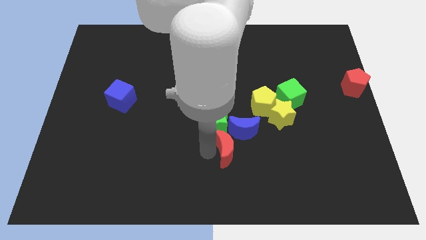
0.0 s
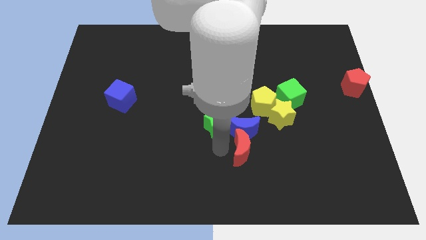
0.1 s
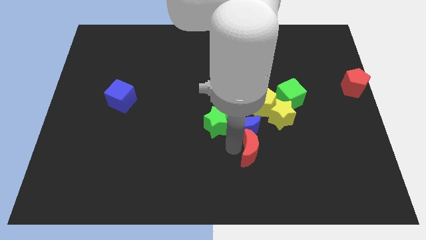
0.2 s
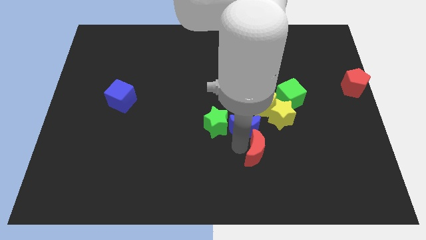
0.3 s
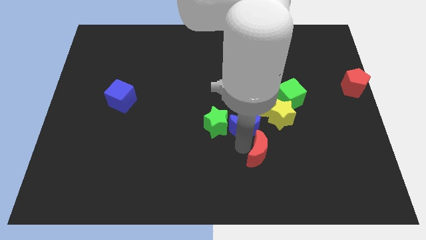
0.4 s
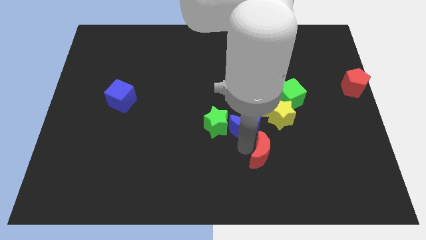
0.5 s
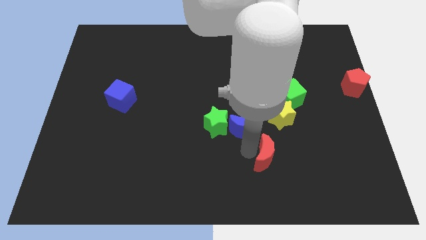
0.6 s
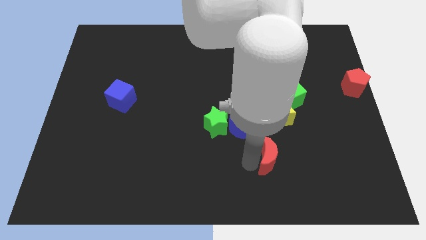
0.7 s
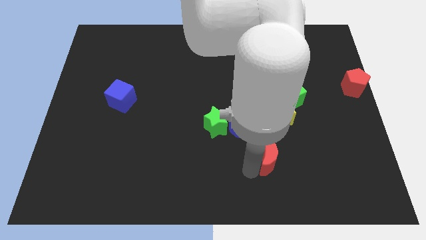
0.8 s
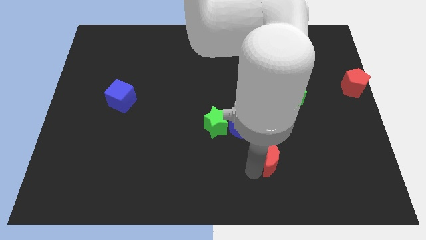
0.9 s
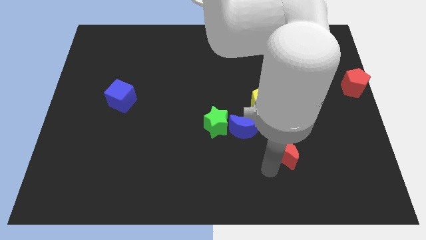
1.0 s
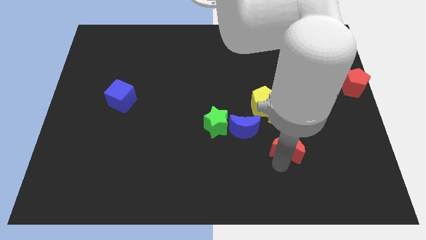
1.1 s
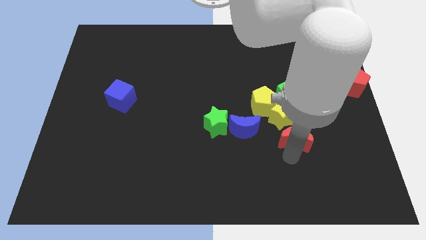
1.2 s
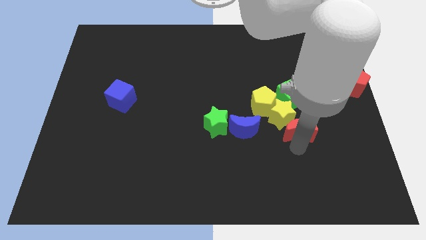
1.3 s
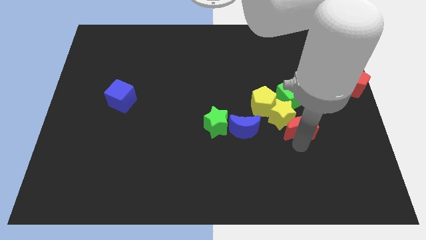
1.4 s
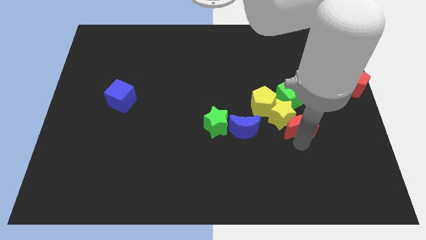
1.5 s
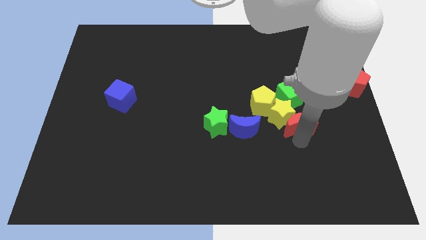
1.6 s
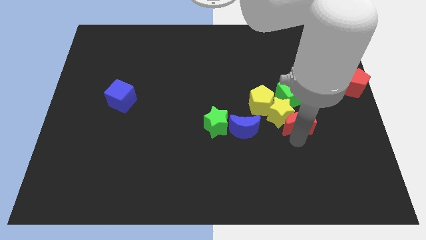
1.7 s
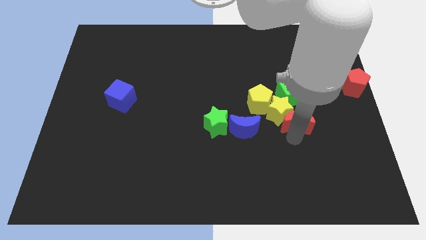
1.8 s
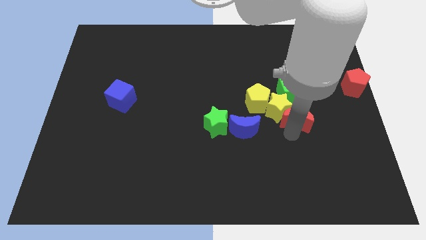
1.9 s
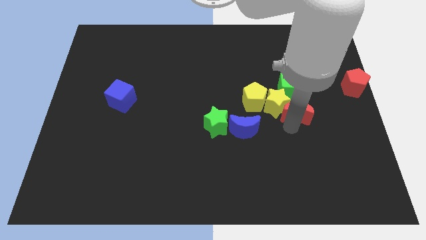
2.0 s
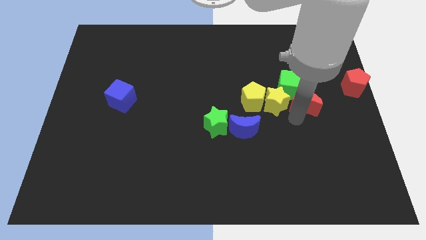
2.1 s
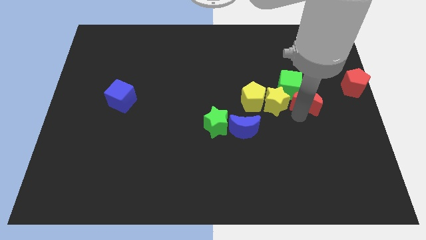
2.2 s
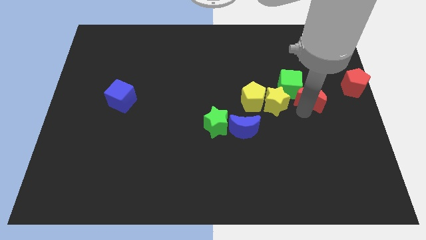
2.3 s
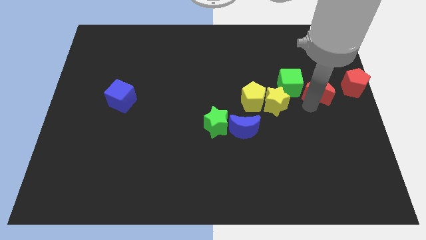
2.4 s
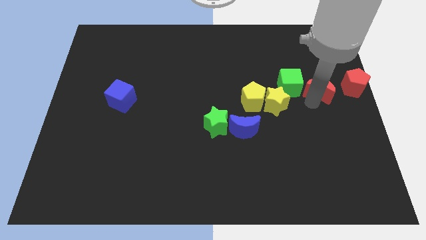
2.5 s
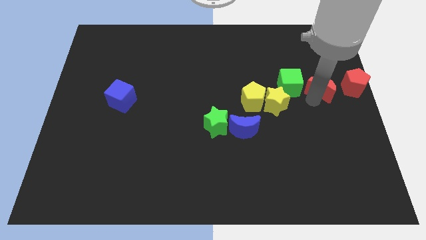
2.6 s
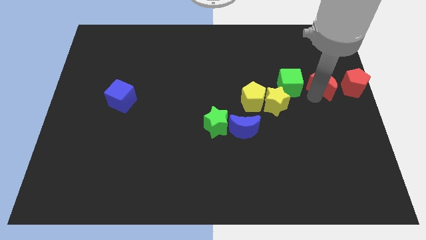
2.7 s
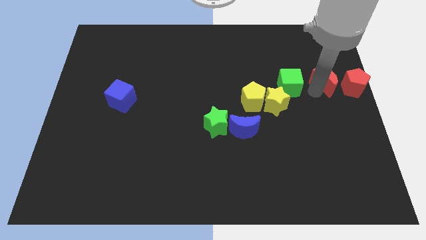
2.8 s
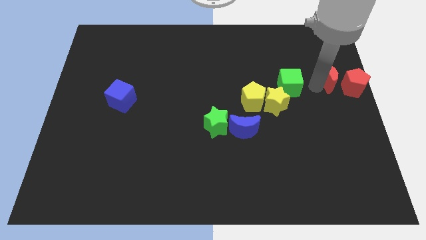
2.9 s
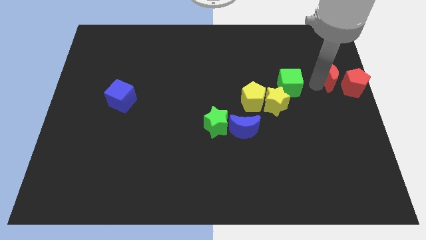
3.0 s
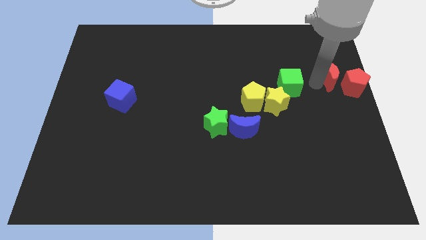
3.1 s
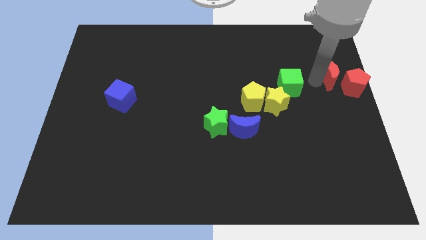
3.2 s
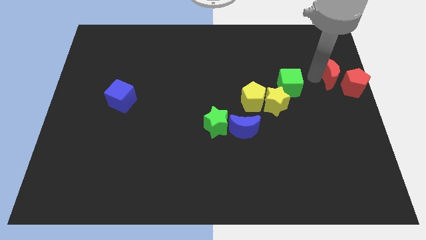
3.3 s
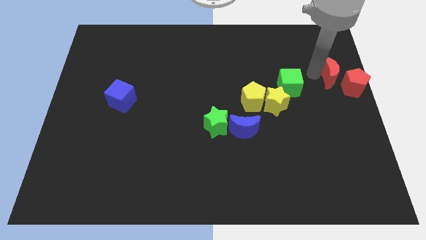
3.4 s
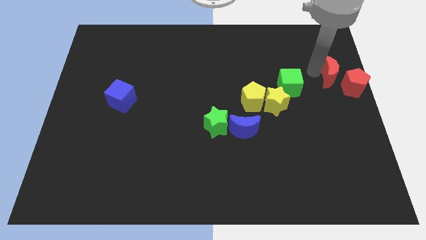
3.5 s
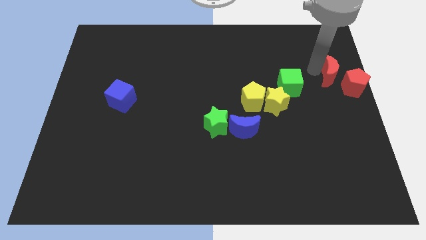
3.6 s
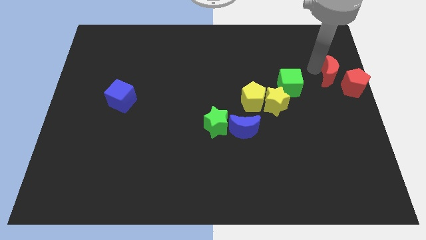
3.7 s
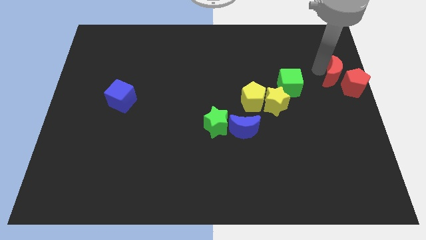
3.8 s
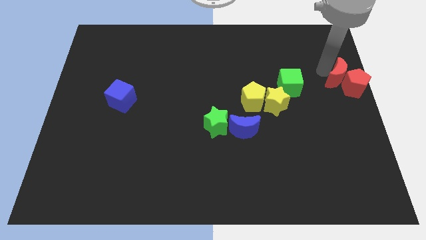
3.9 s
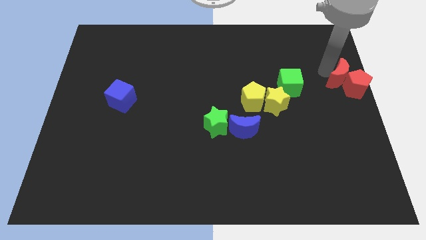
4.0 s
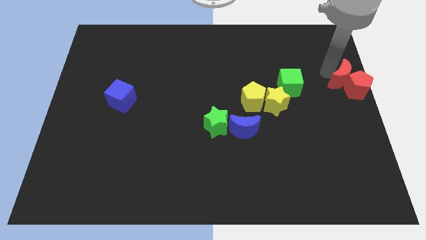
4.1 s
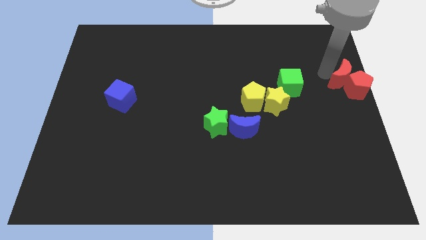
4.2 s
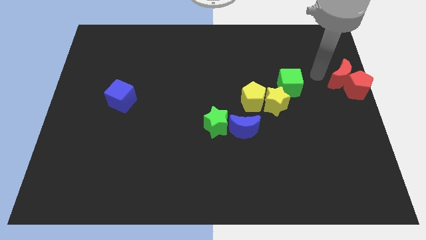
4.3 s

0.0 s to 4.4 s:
slide the red moon into the red pentagon

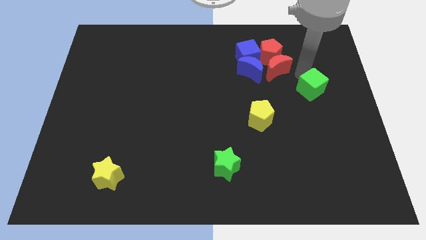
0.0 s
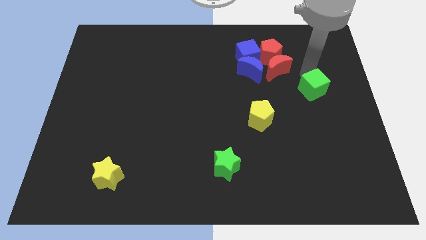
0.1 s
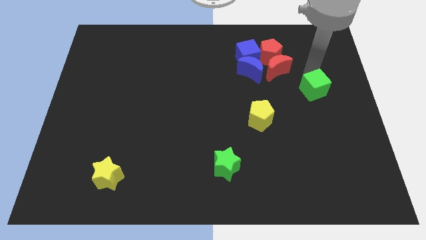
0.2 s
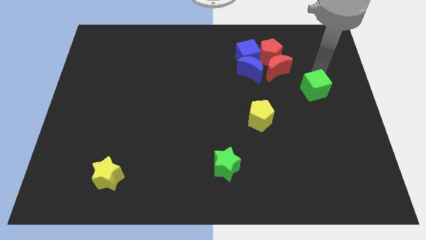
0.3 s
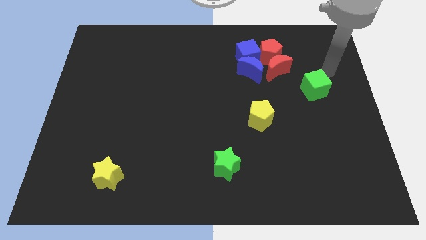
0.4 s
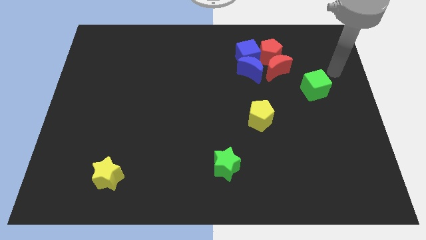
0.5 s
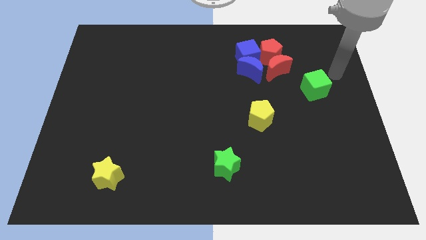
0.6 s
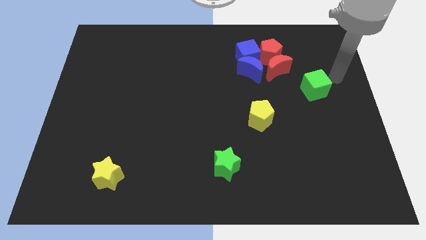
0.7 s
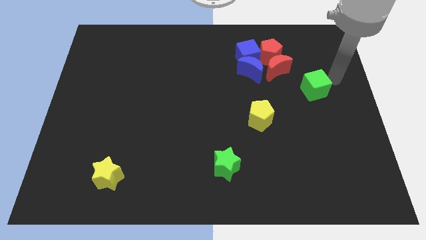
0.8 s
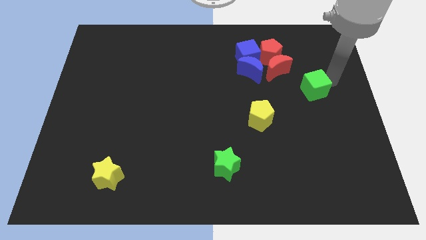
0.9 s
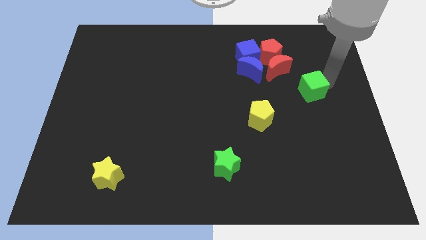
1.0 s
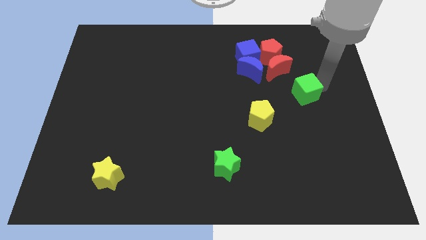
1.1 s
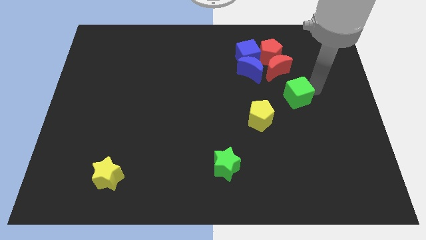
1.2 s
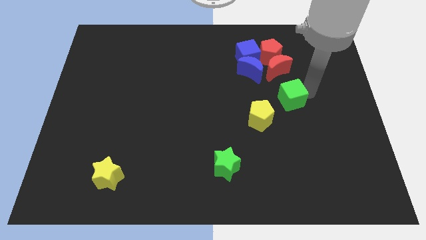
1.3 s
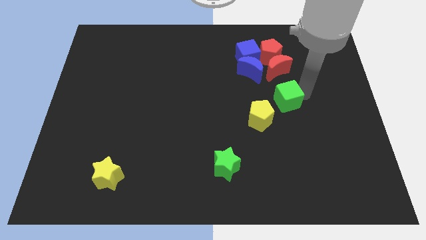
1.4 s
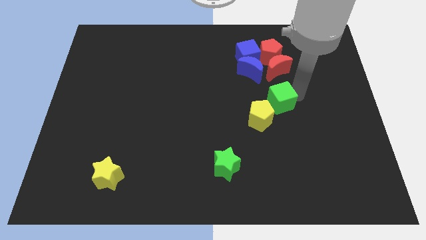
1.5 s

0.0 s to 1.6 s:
move the green cube close to the yellow pentagon

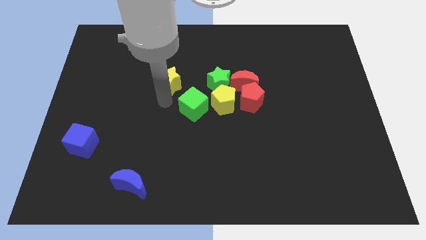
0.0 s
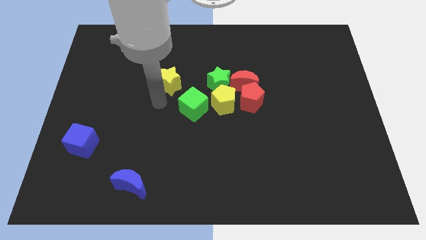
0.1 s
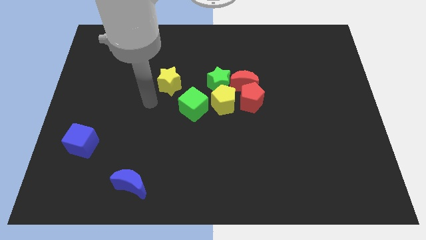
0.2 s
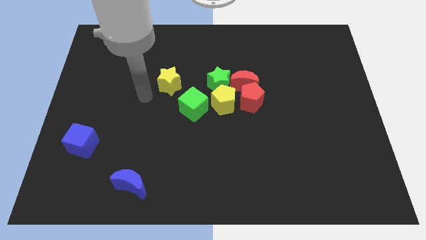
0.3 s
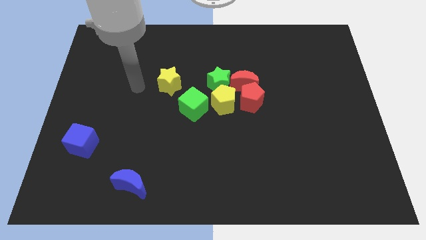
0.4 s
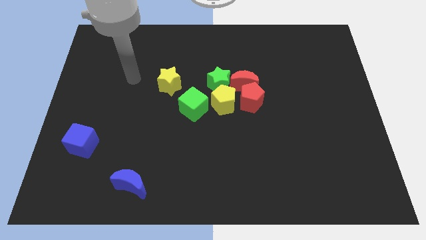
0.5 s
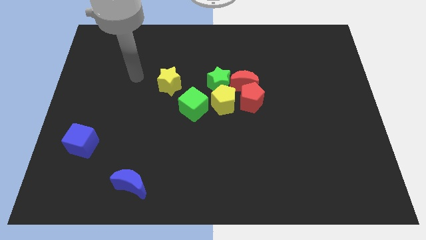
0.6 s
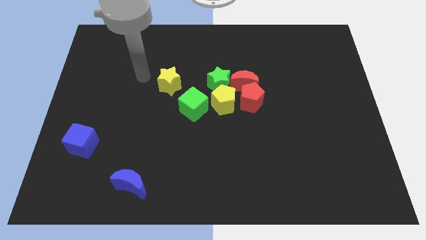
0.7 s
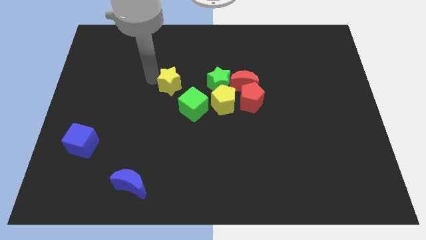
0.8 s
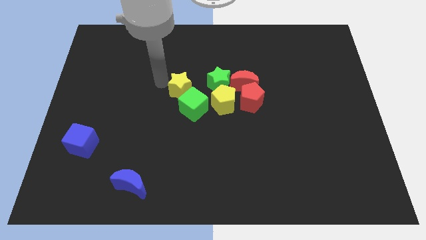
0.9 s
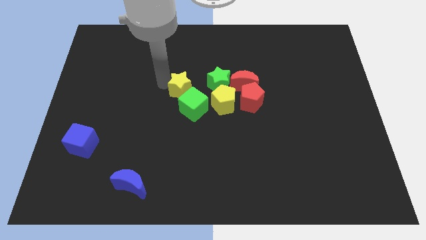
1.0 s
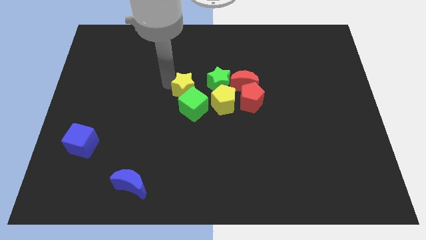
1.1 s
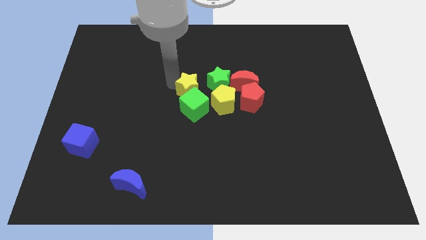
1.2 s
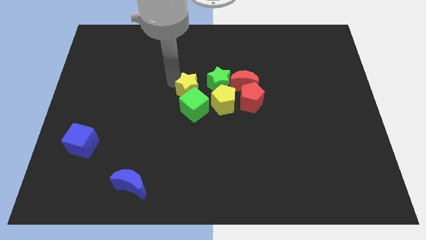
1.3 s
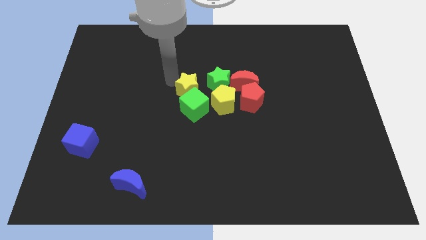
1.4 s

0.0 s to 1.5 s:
push the yellow star into the top side of the green cube

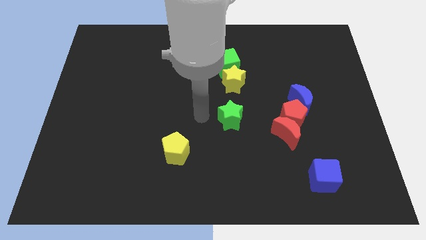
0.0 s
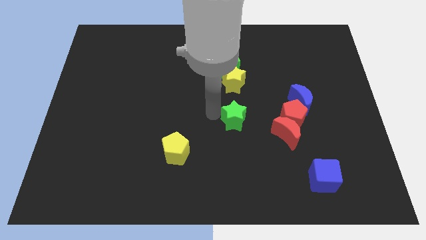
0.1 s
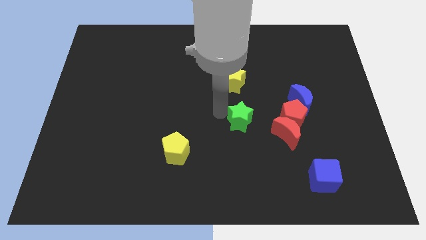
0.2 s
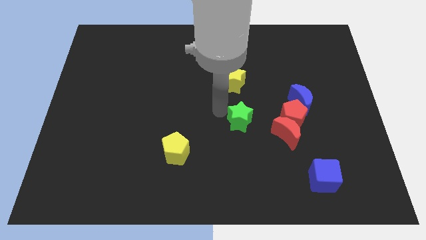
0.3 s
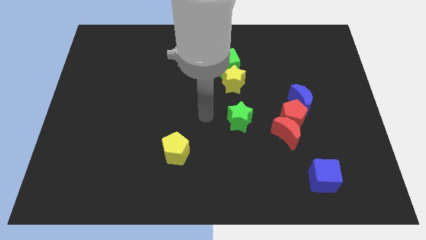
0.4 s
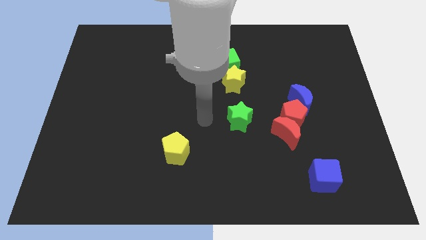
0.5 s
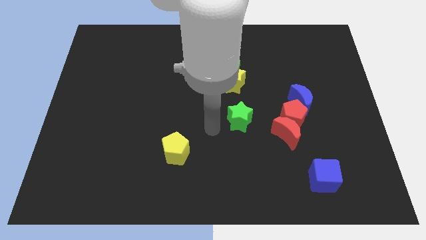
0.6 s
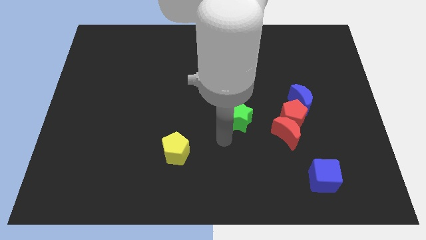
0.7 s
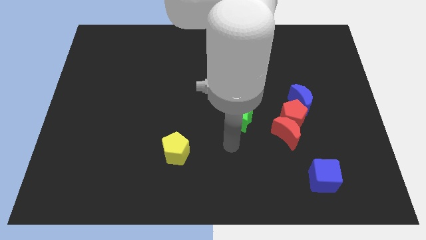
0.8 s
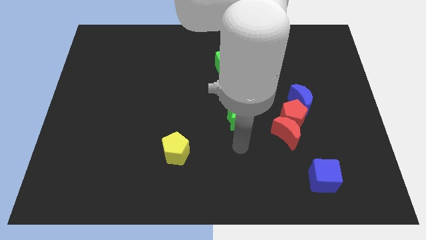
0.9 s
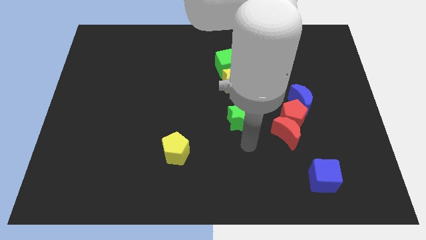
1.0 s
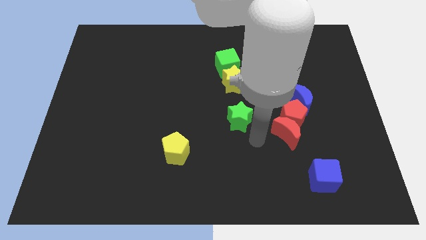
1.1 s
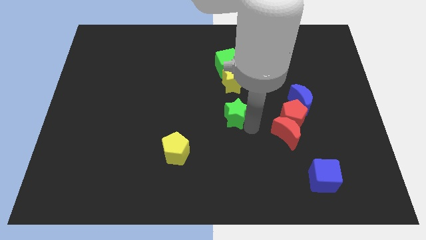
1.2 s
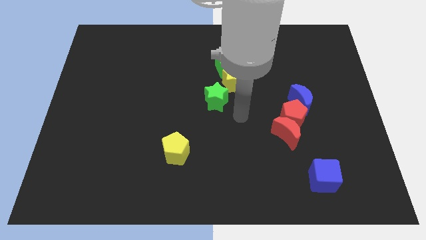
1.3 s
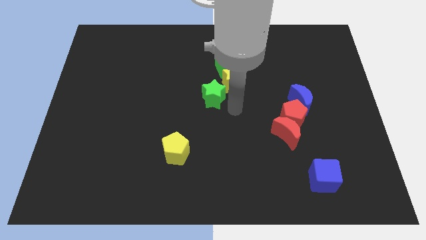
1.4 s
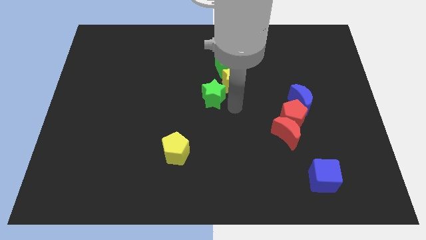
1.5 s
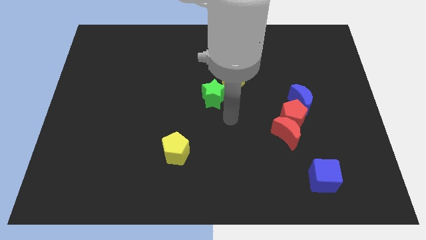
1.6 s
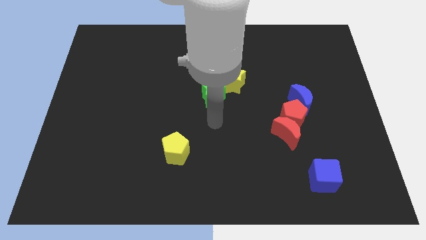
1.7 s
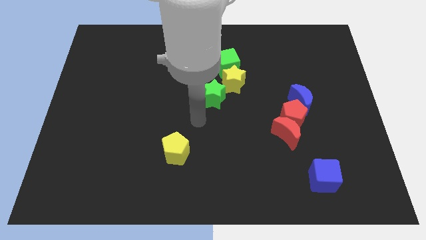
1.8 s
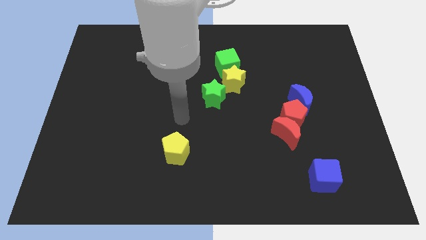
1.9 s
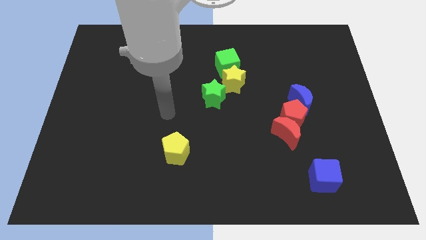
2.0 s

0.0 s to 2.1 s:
slide the green star towards the yellow star
